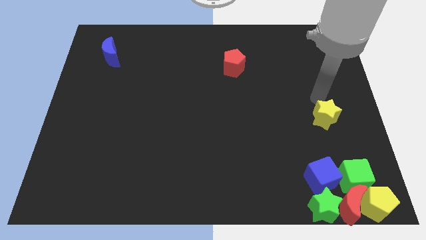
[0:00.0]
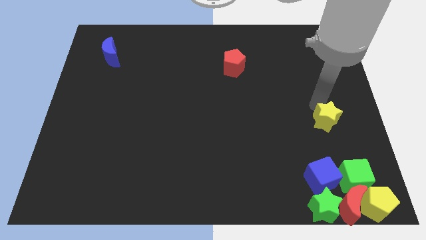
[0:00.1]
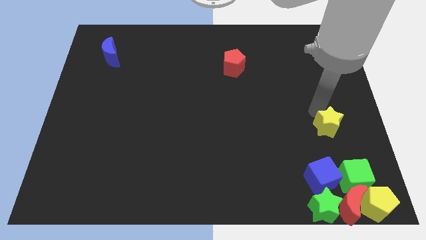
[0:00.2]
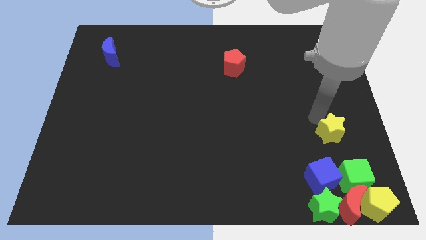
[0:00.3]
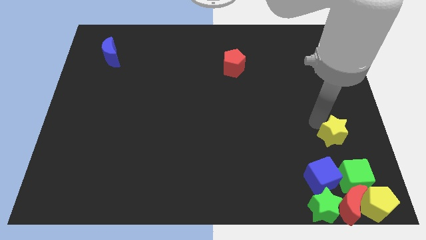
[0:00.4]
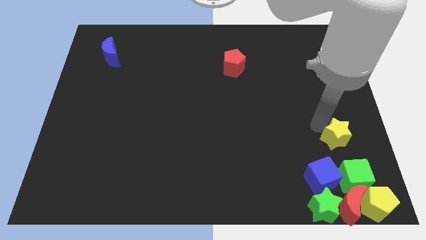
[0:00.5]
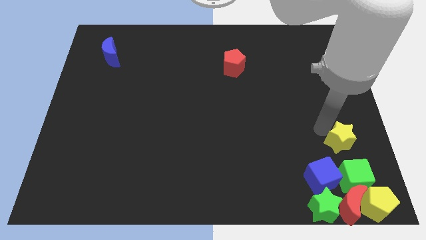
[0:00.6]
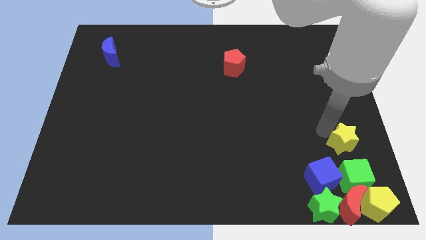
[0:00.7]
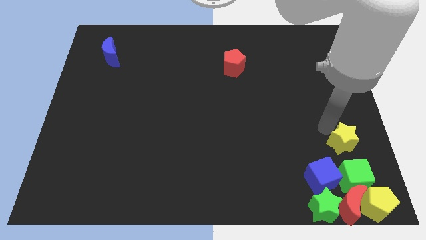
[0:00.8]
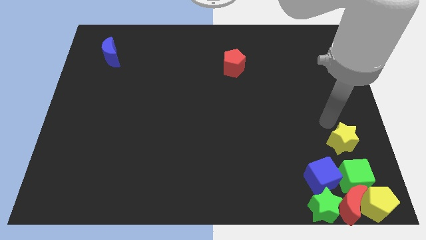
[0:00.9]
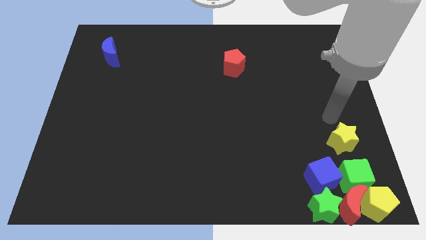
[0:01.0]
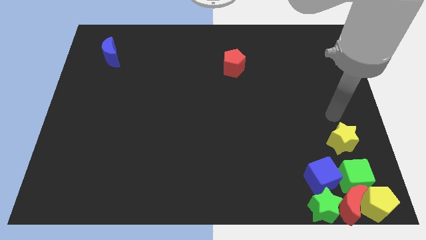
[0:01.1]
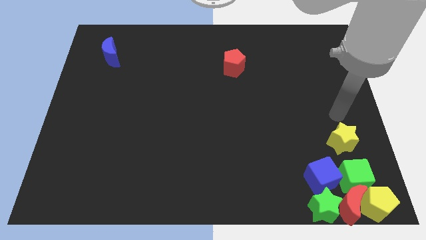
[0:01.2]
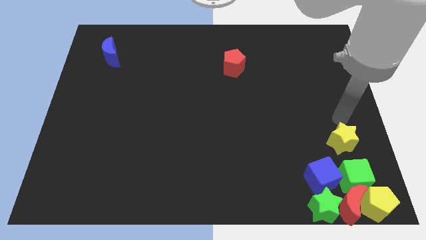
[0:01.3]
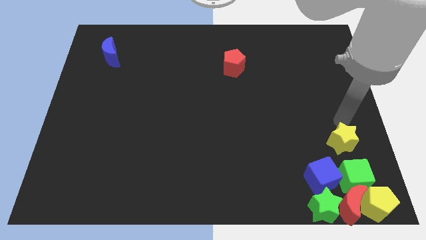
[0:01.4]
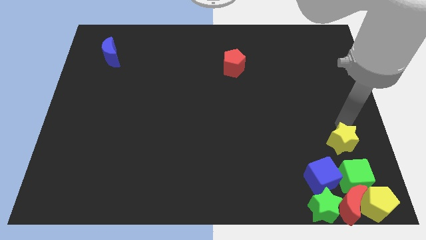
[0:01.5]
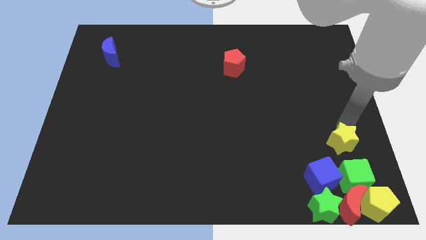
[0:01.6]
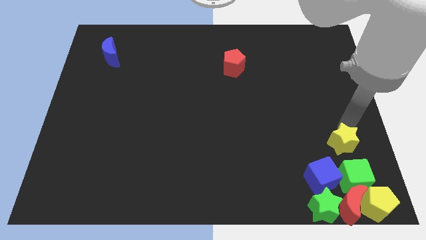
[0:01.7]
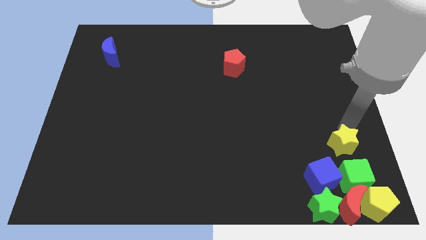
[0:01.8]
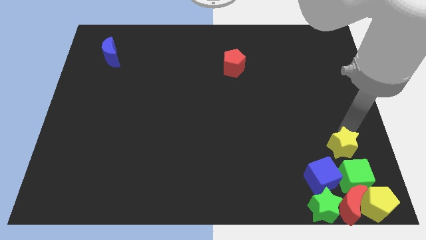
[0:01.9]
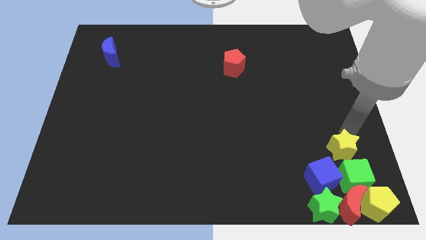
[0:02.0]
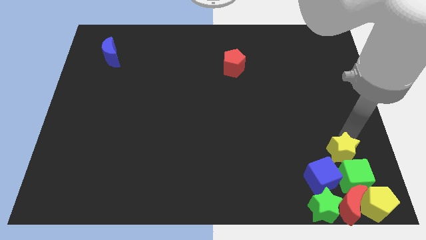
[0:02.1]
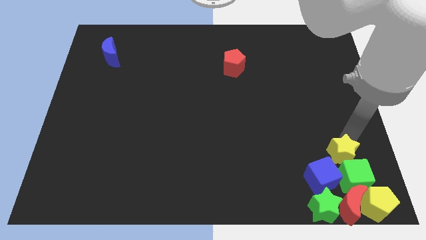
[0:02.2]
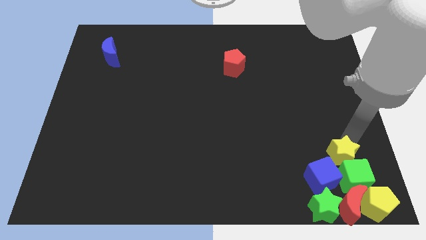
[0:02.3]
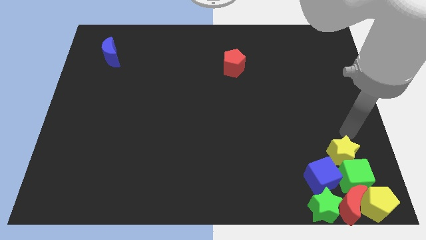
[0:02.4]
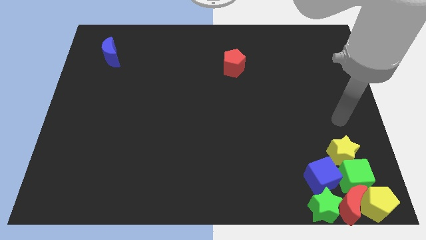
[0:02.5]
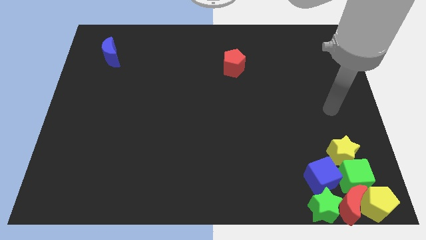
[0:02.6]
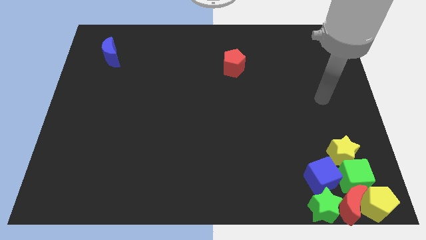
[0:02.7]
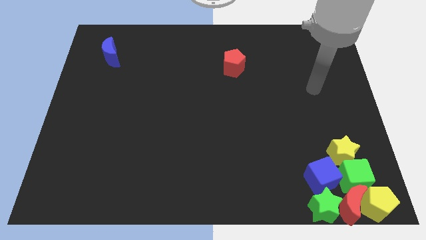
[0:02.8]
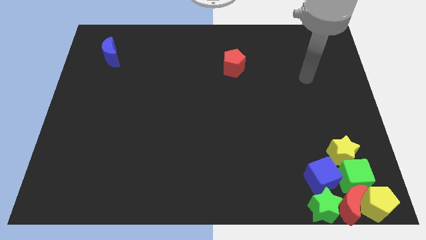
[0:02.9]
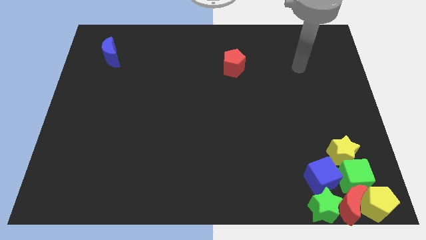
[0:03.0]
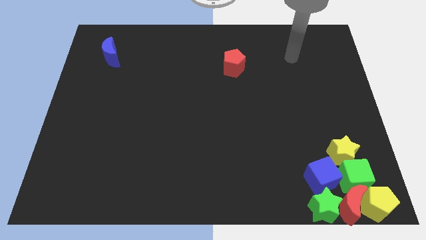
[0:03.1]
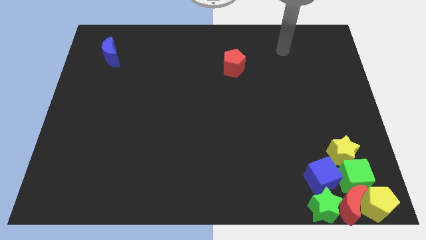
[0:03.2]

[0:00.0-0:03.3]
push the yellow star into the group of blocks

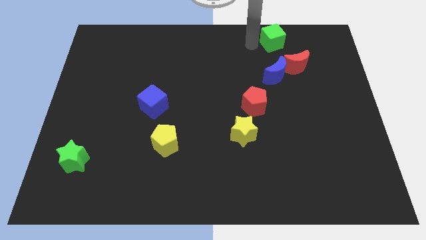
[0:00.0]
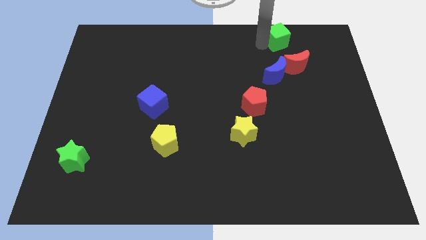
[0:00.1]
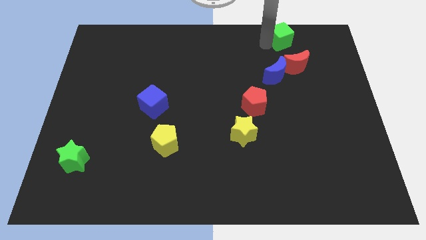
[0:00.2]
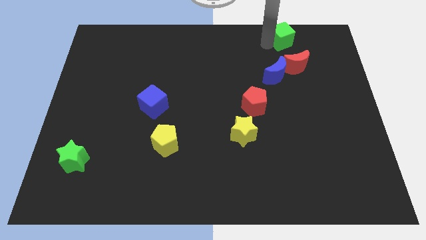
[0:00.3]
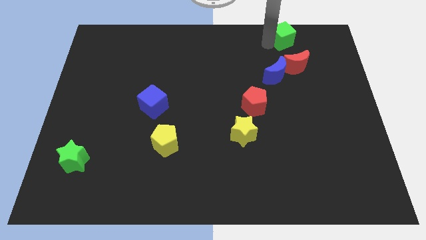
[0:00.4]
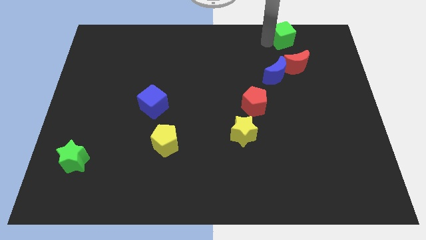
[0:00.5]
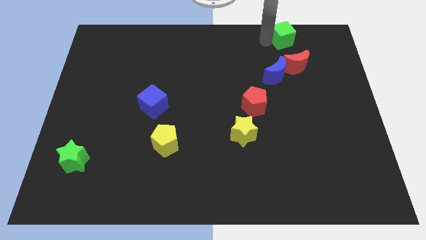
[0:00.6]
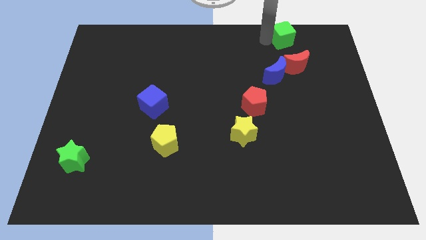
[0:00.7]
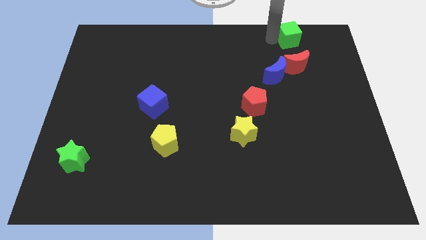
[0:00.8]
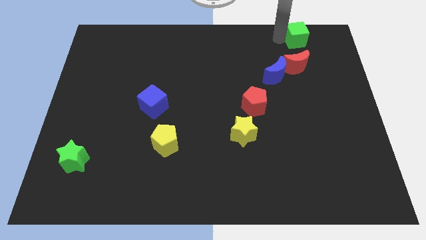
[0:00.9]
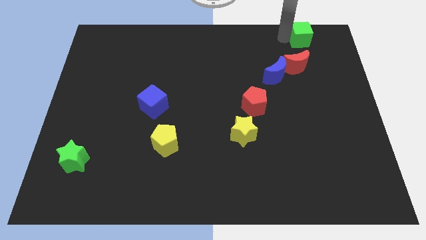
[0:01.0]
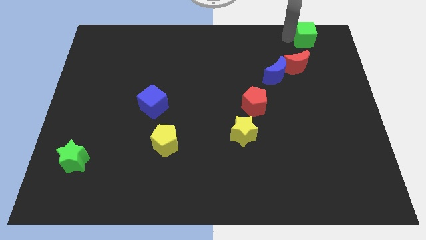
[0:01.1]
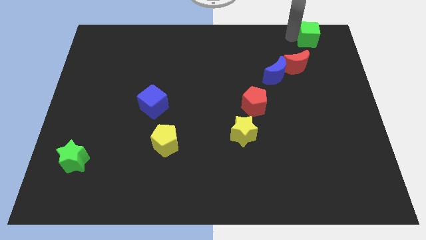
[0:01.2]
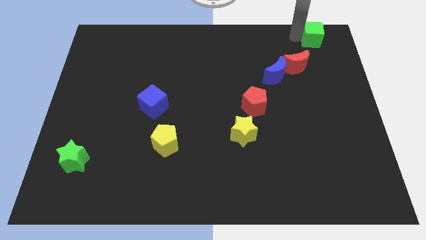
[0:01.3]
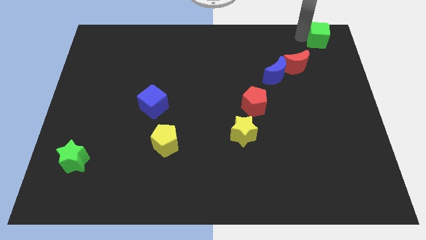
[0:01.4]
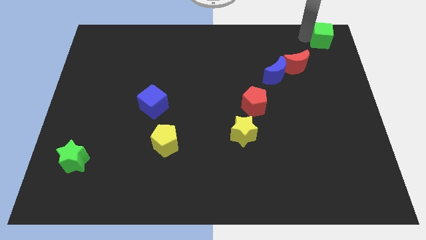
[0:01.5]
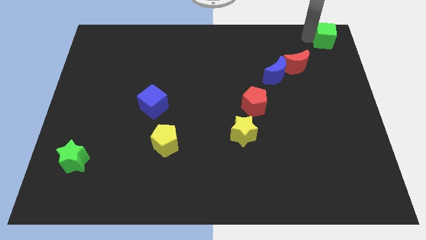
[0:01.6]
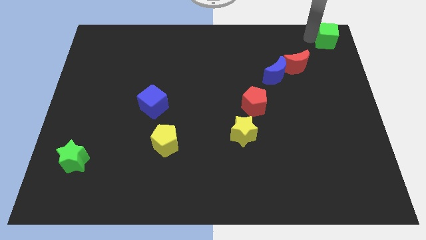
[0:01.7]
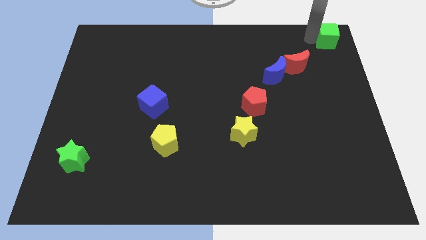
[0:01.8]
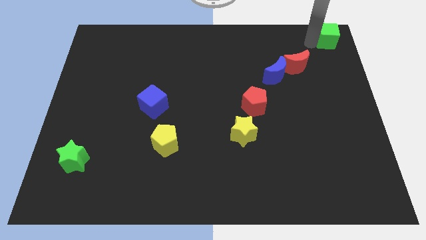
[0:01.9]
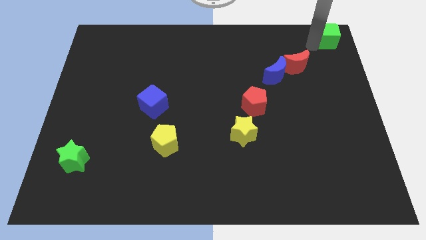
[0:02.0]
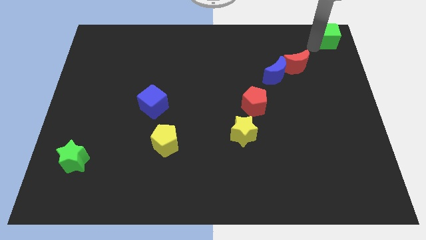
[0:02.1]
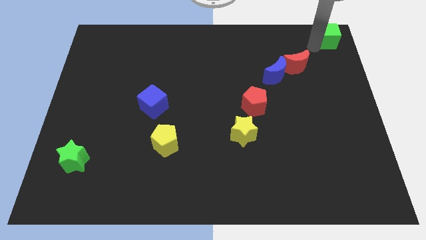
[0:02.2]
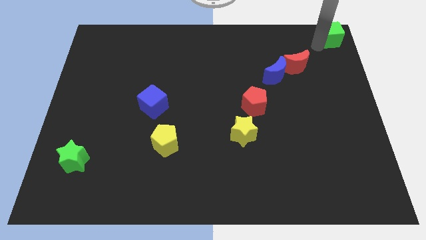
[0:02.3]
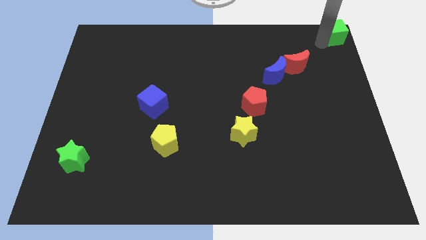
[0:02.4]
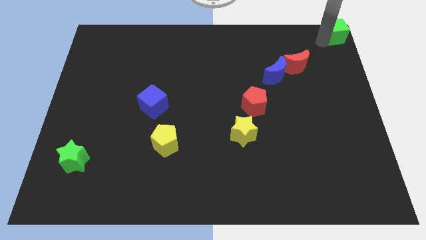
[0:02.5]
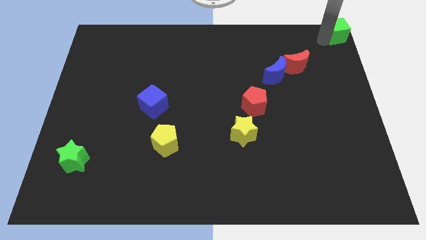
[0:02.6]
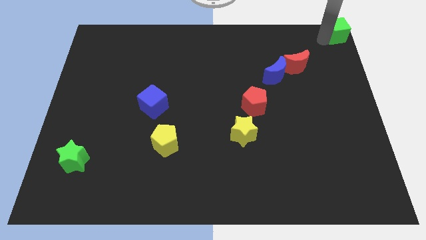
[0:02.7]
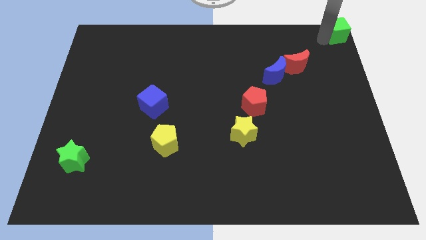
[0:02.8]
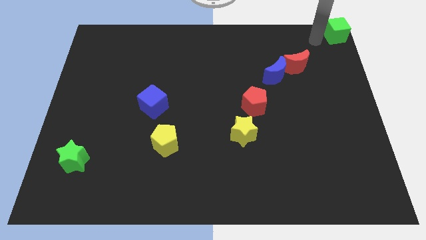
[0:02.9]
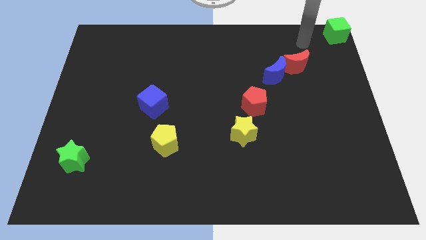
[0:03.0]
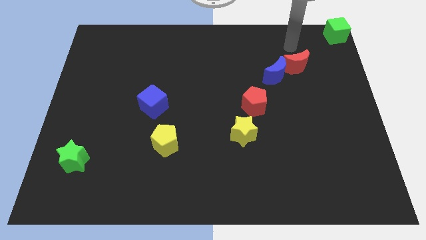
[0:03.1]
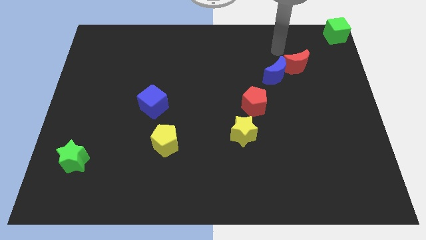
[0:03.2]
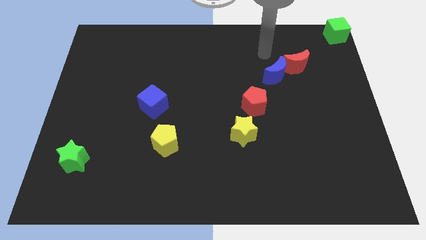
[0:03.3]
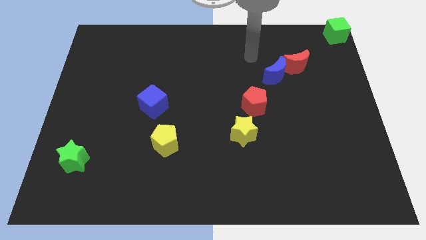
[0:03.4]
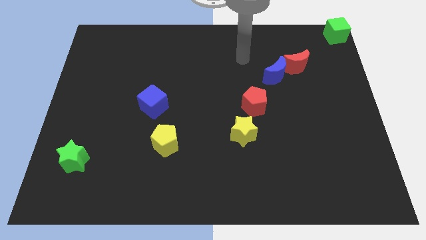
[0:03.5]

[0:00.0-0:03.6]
put the green cube at the top right corner of the board

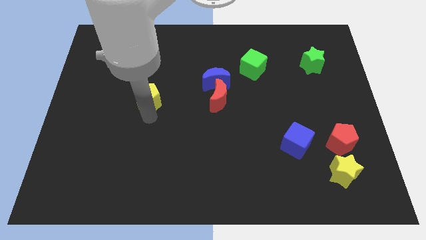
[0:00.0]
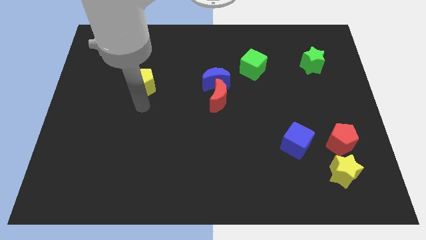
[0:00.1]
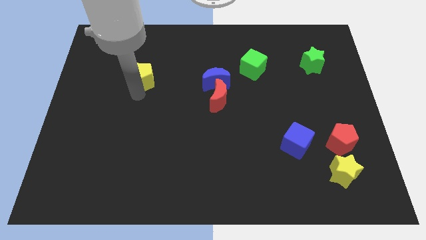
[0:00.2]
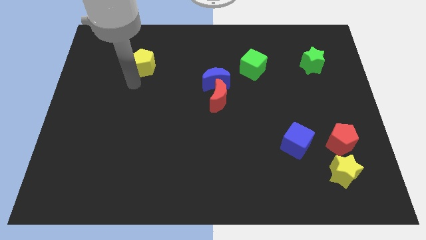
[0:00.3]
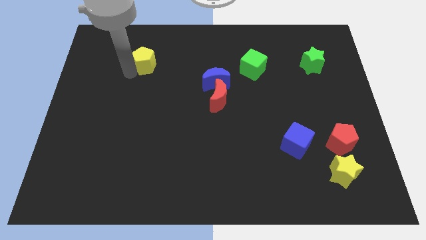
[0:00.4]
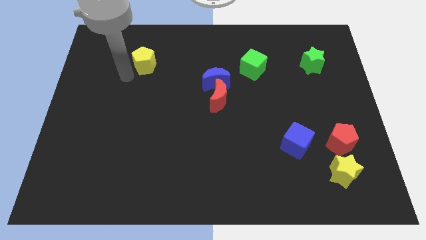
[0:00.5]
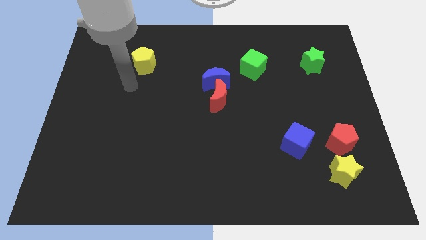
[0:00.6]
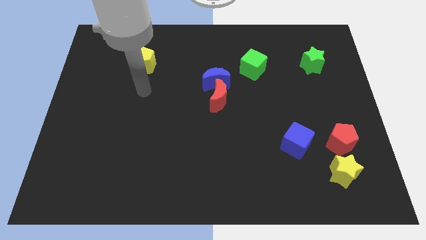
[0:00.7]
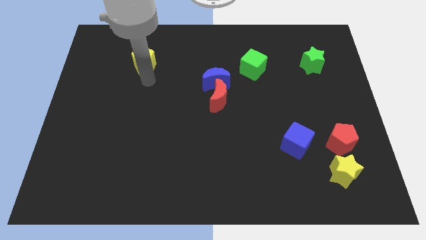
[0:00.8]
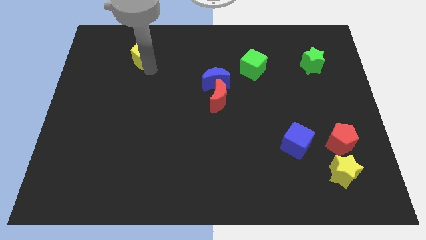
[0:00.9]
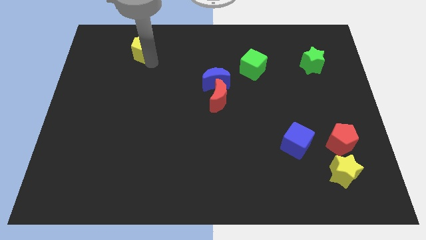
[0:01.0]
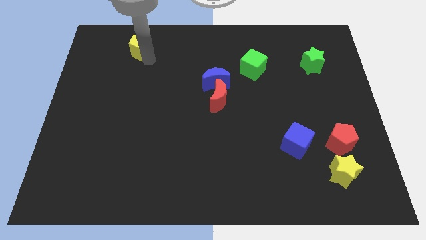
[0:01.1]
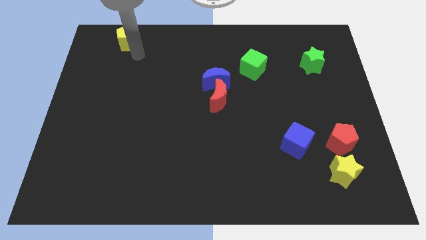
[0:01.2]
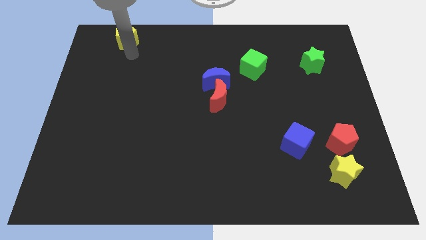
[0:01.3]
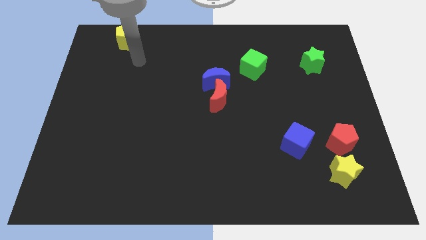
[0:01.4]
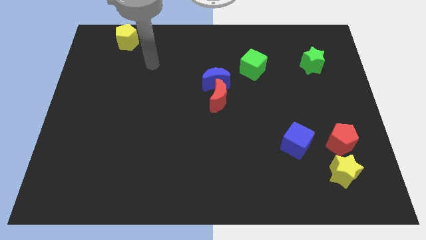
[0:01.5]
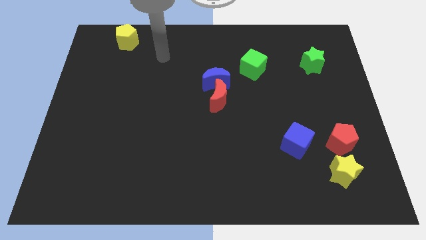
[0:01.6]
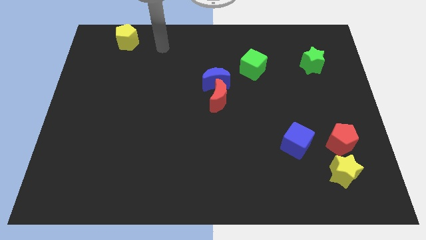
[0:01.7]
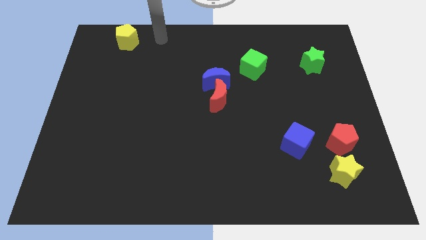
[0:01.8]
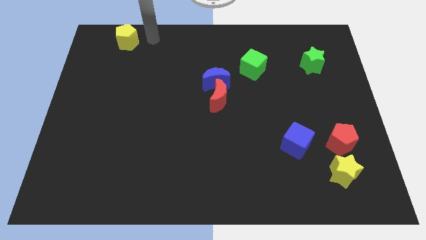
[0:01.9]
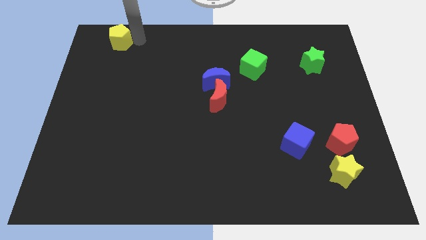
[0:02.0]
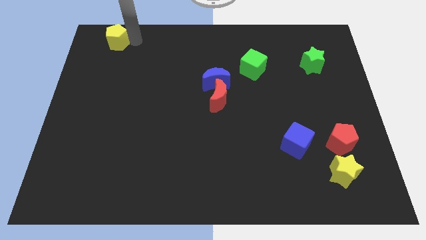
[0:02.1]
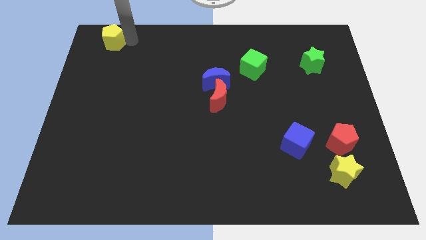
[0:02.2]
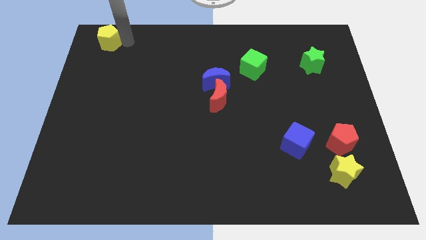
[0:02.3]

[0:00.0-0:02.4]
slide the yellow pentagon towards the top left
